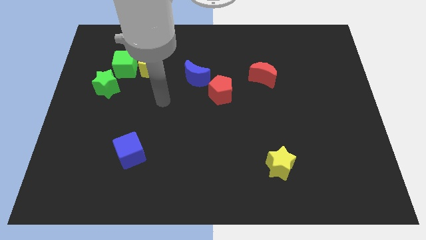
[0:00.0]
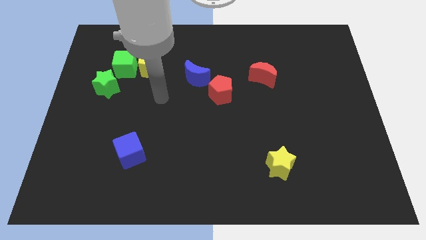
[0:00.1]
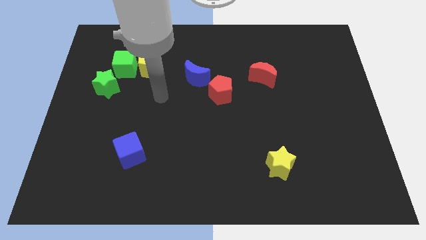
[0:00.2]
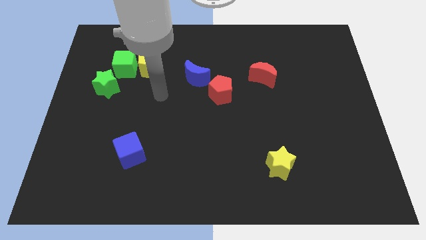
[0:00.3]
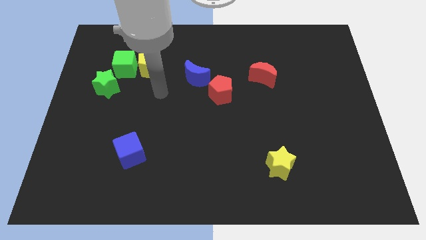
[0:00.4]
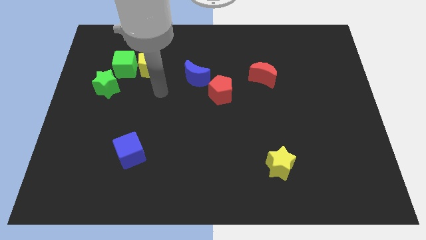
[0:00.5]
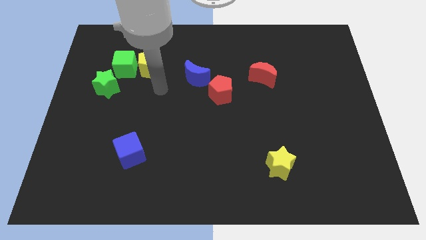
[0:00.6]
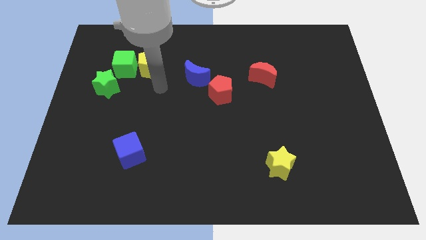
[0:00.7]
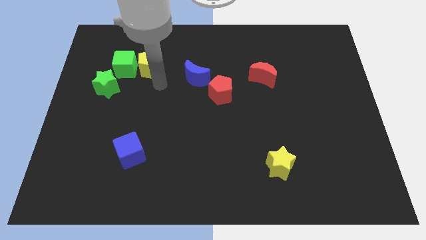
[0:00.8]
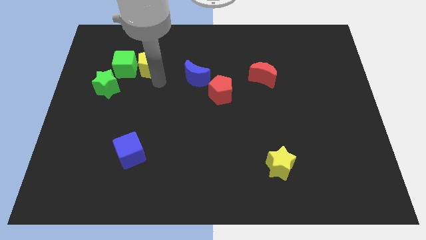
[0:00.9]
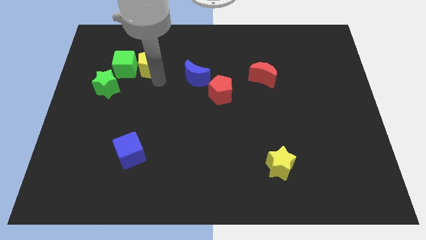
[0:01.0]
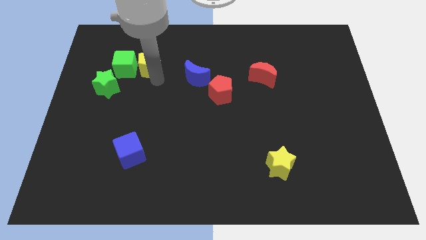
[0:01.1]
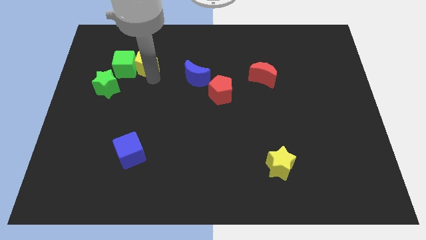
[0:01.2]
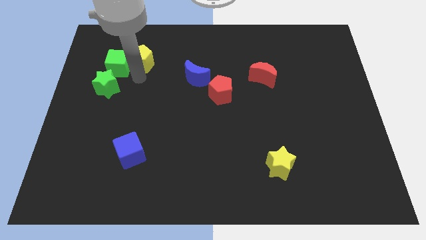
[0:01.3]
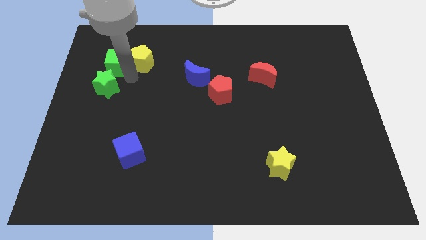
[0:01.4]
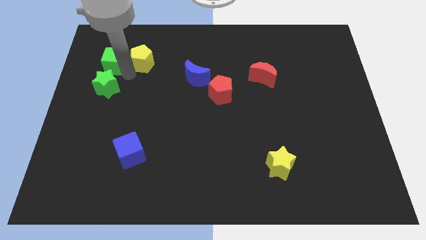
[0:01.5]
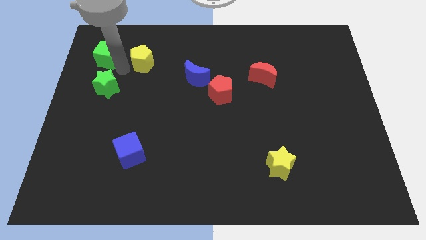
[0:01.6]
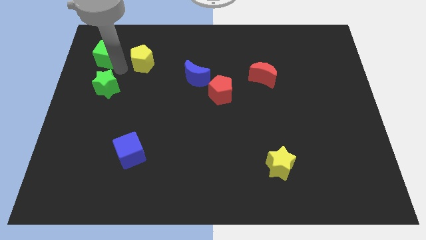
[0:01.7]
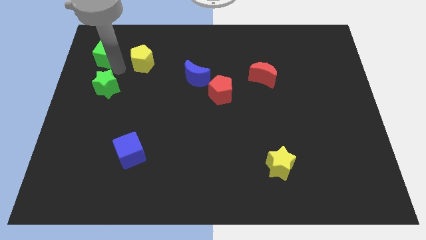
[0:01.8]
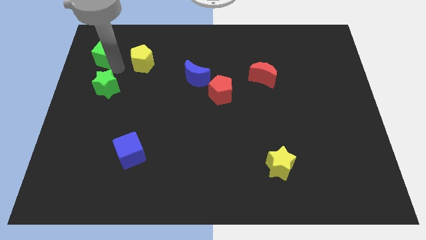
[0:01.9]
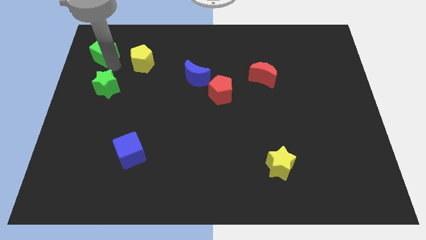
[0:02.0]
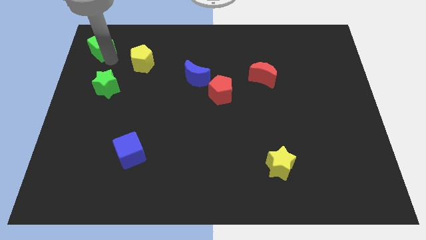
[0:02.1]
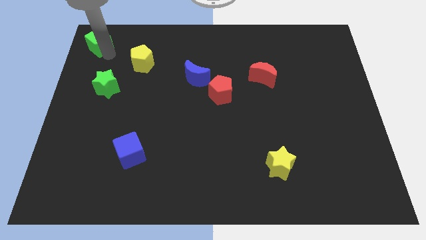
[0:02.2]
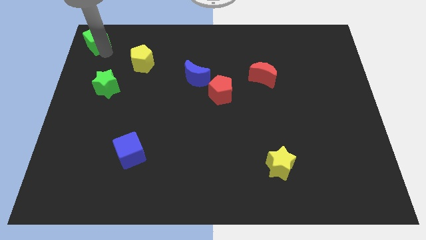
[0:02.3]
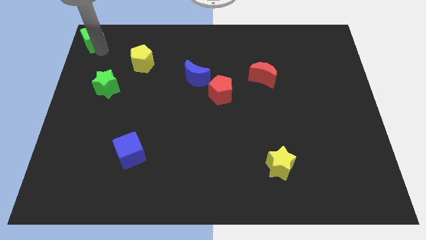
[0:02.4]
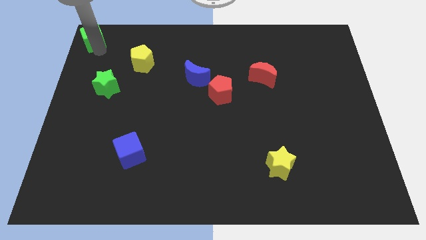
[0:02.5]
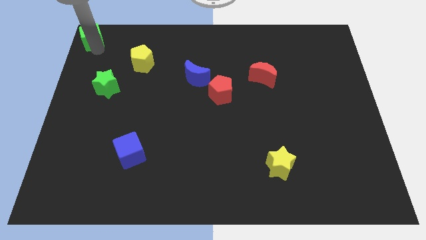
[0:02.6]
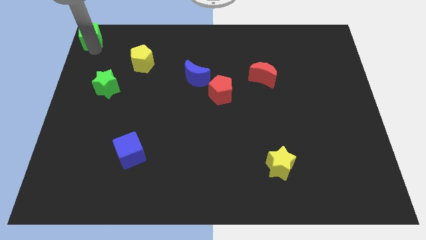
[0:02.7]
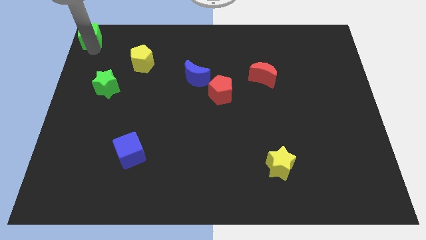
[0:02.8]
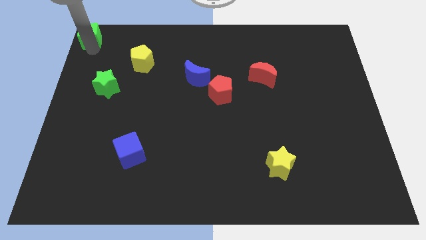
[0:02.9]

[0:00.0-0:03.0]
separate the green cube to the top left corner

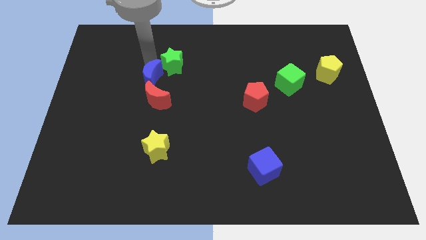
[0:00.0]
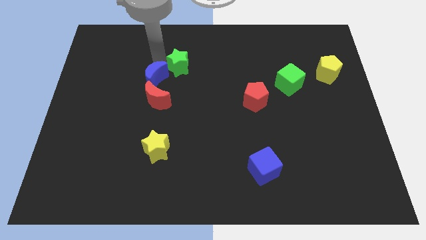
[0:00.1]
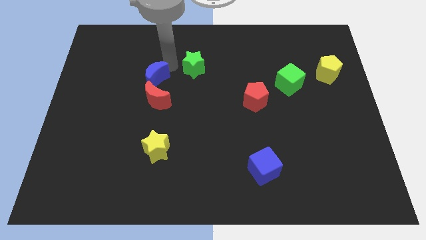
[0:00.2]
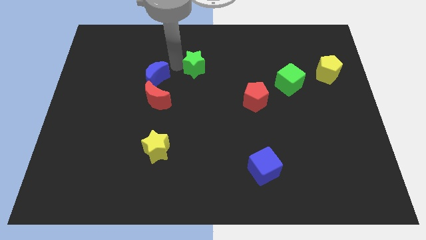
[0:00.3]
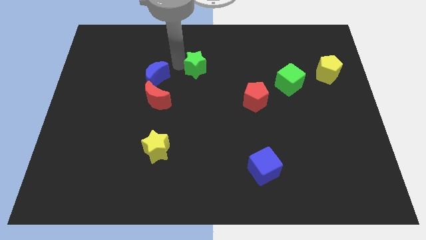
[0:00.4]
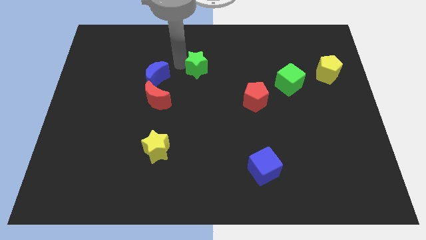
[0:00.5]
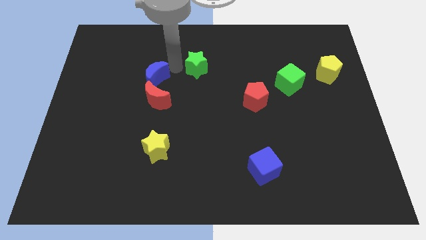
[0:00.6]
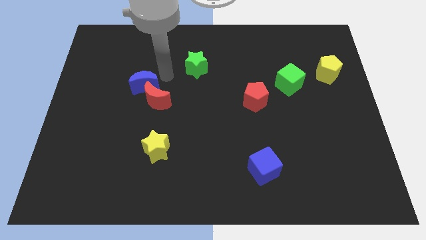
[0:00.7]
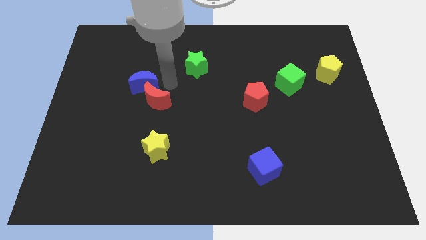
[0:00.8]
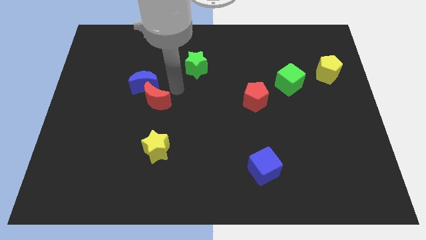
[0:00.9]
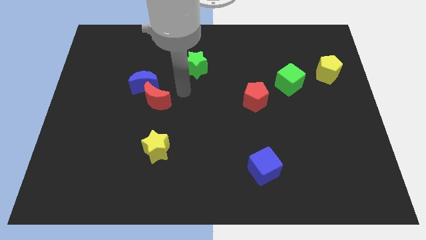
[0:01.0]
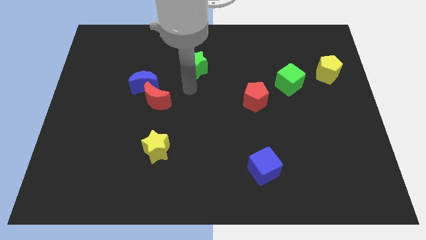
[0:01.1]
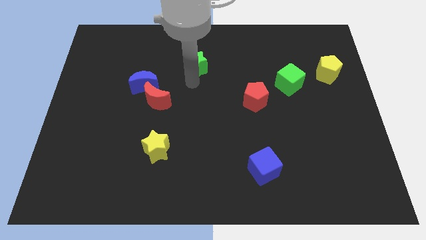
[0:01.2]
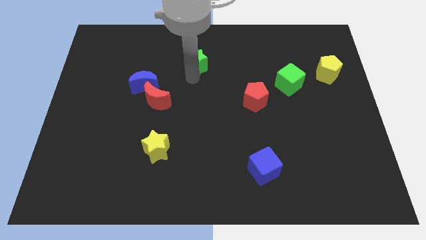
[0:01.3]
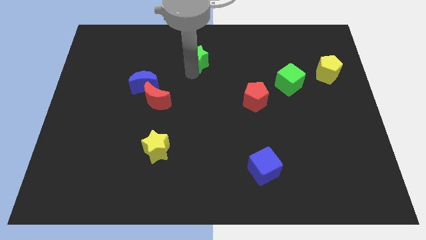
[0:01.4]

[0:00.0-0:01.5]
separate the green star from the blue moon

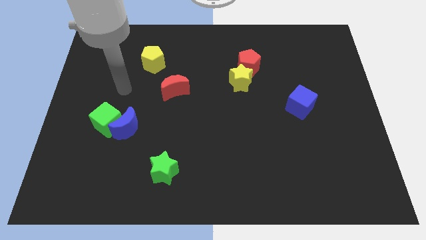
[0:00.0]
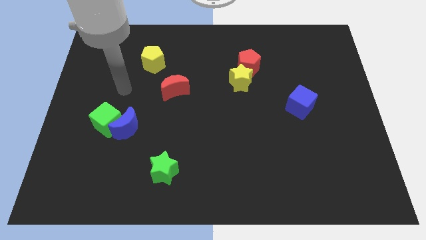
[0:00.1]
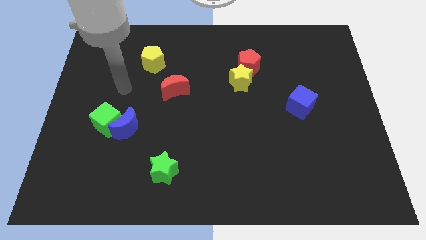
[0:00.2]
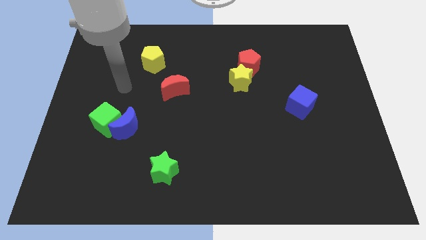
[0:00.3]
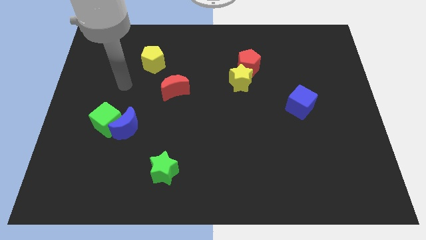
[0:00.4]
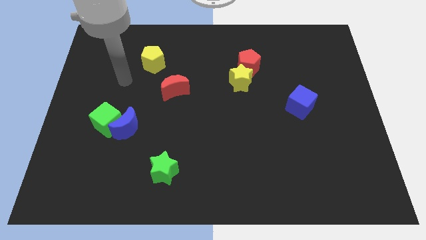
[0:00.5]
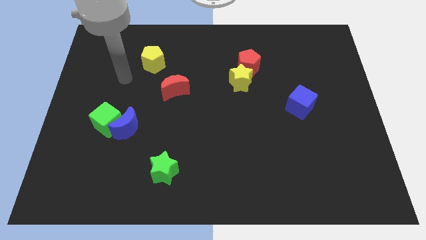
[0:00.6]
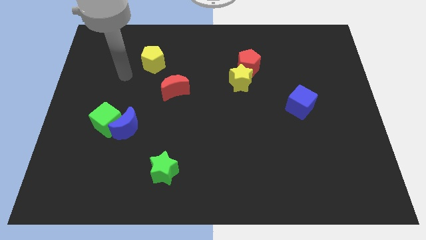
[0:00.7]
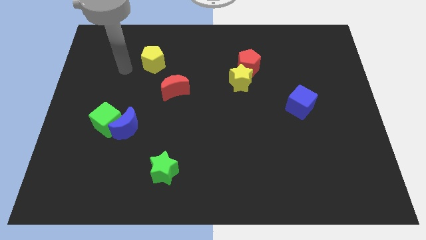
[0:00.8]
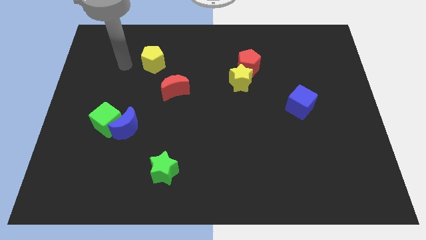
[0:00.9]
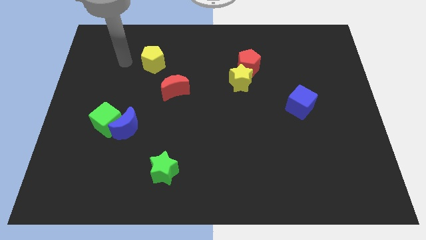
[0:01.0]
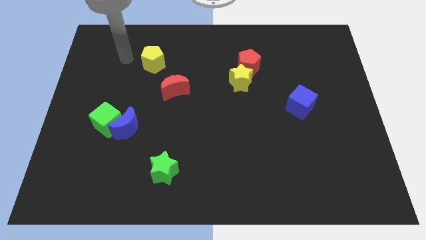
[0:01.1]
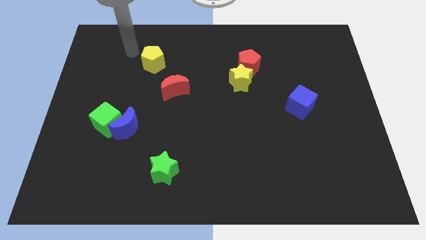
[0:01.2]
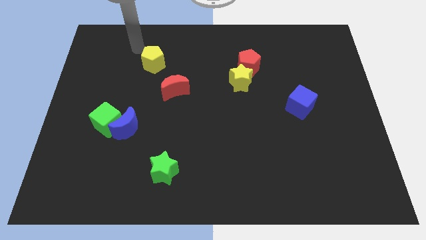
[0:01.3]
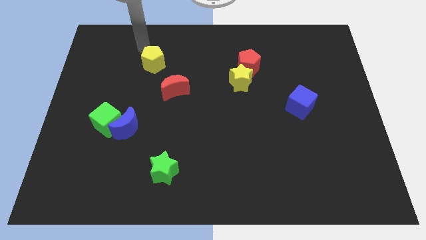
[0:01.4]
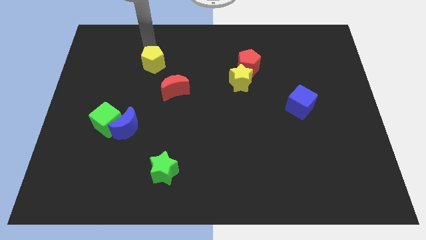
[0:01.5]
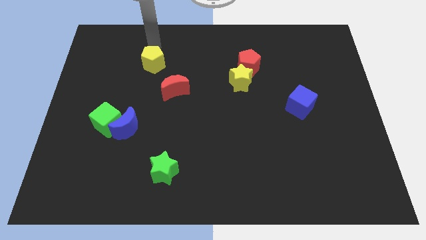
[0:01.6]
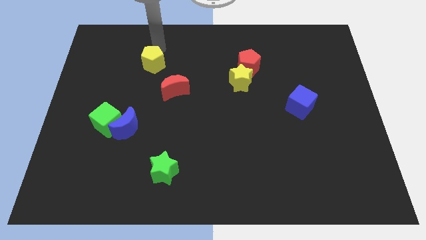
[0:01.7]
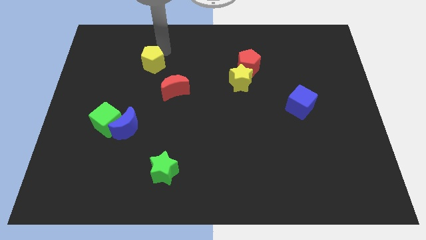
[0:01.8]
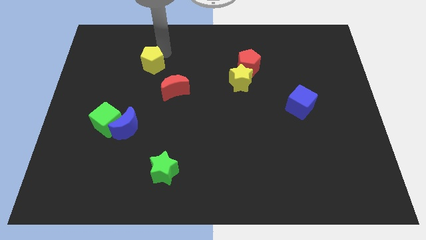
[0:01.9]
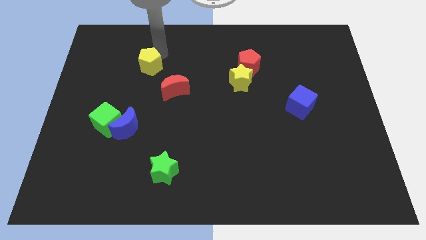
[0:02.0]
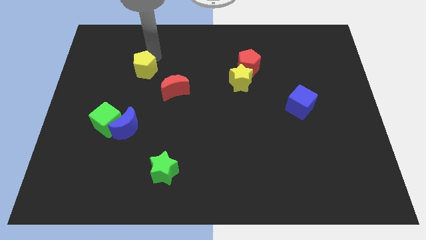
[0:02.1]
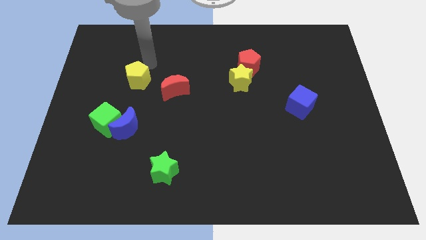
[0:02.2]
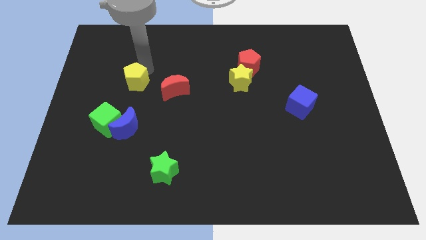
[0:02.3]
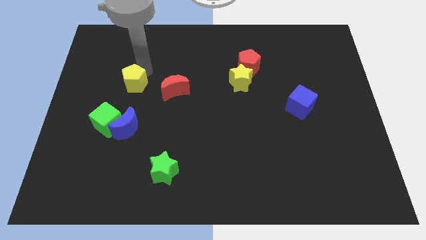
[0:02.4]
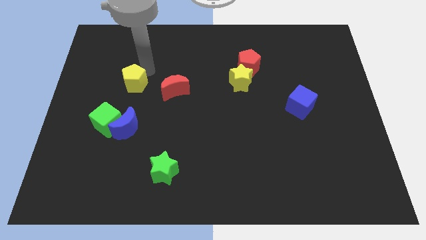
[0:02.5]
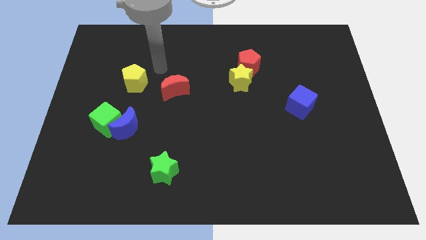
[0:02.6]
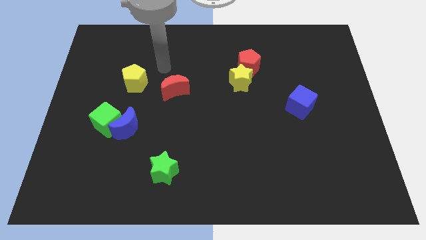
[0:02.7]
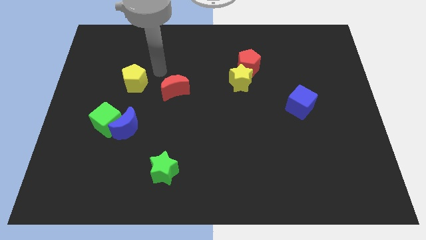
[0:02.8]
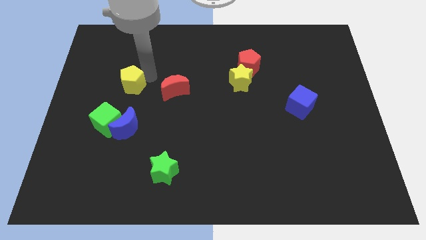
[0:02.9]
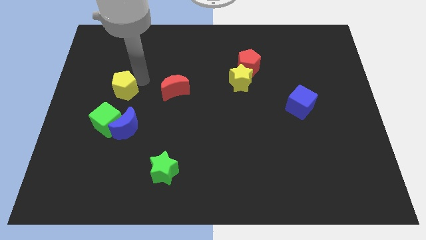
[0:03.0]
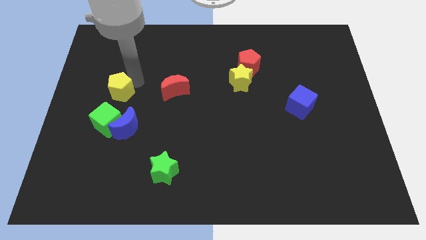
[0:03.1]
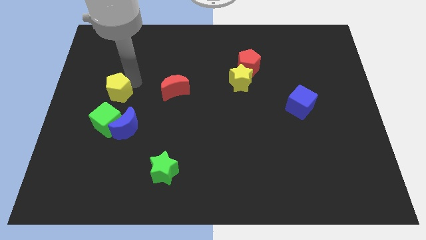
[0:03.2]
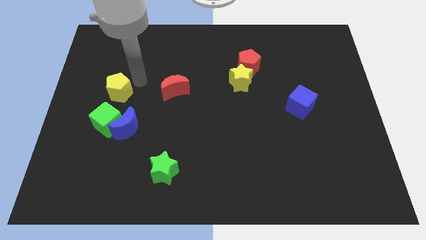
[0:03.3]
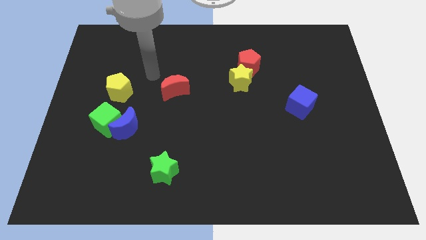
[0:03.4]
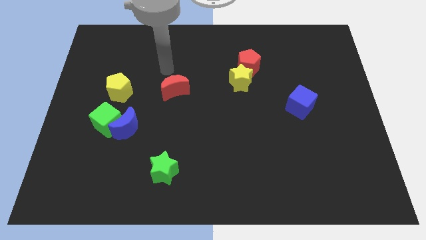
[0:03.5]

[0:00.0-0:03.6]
move yellow pentagon towards green cube

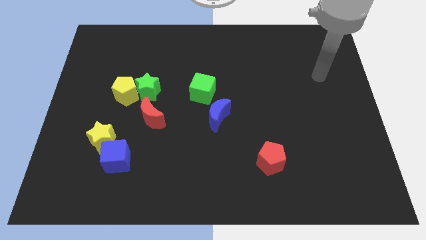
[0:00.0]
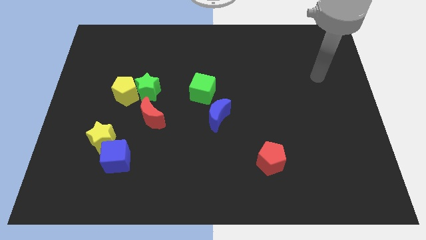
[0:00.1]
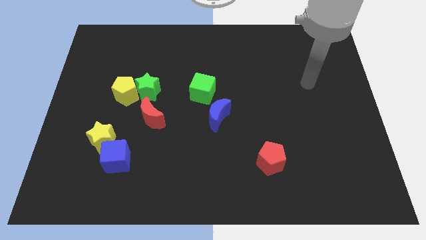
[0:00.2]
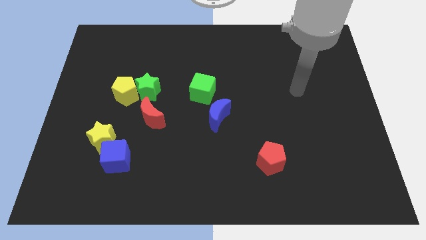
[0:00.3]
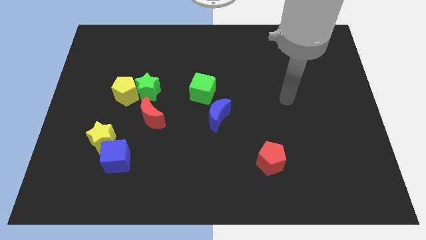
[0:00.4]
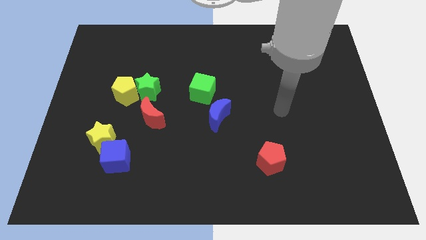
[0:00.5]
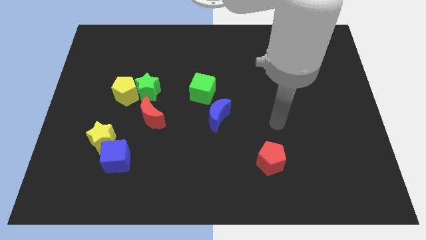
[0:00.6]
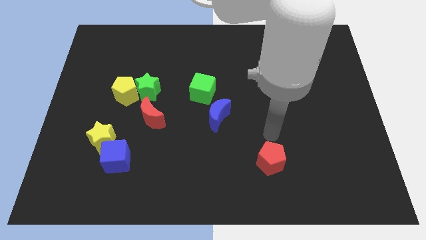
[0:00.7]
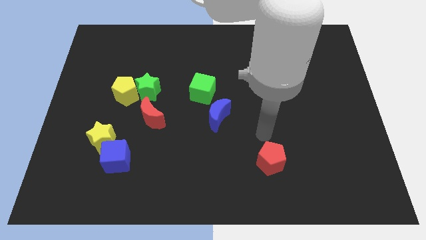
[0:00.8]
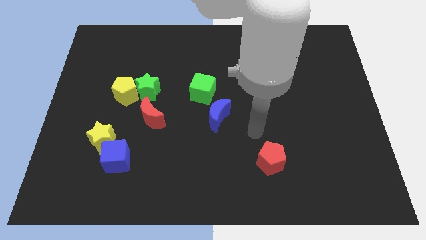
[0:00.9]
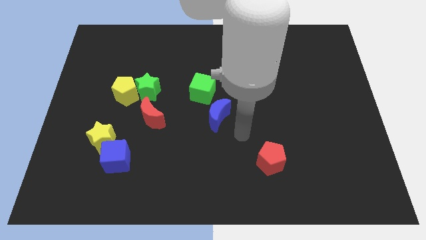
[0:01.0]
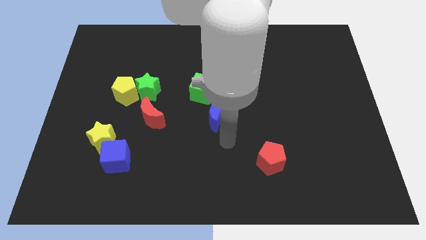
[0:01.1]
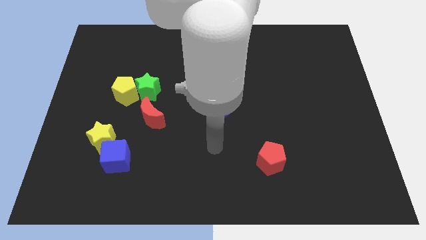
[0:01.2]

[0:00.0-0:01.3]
move your arm below the blue crescent
